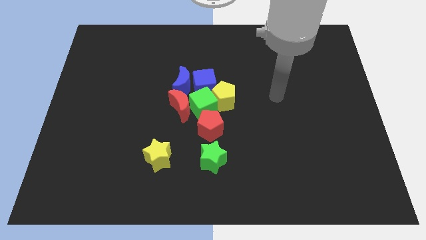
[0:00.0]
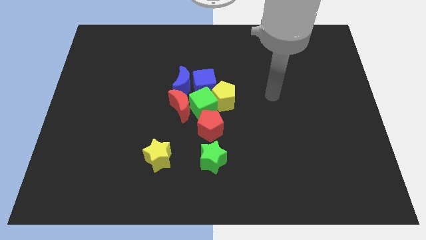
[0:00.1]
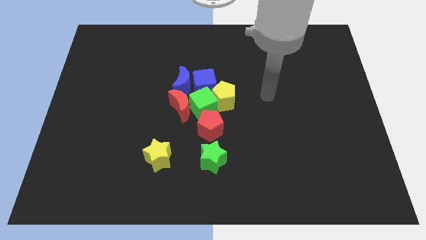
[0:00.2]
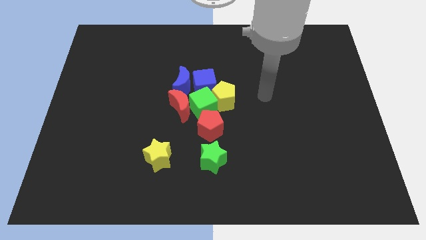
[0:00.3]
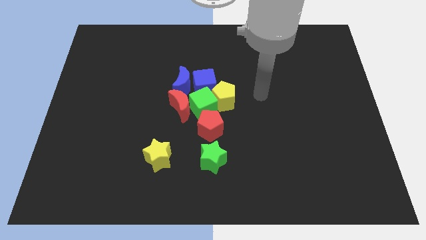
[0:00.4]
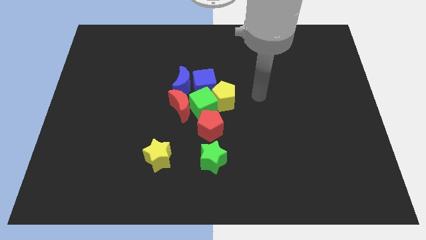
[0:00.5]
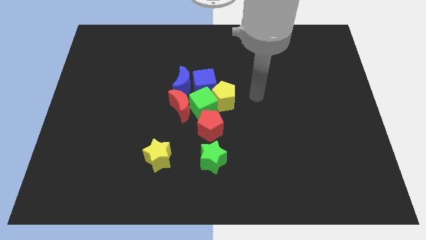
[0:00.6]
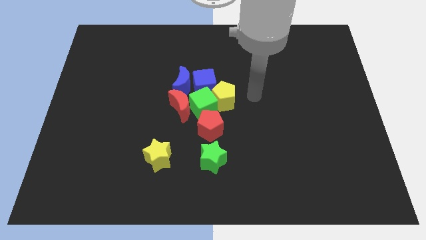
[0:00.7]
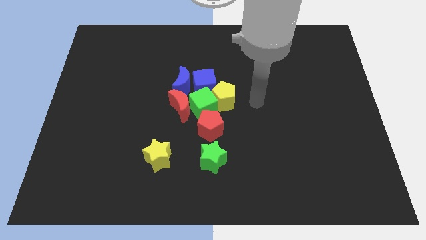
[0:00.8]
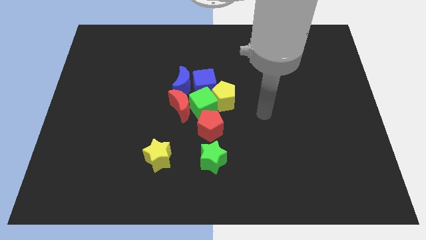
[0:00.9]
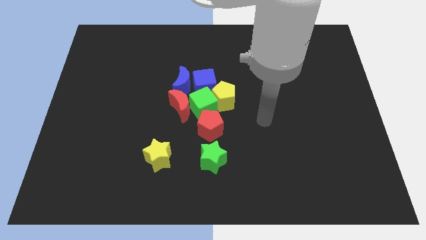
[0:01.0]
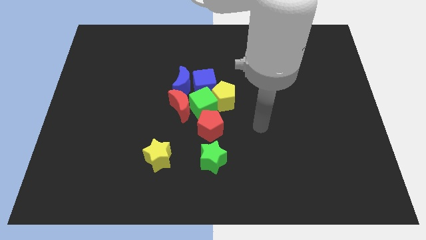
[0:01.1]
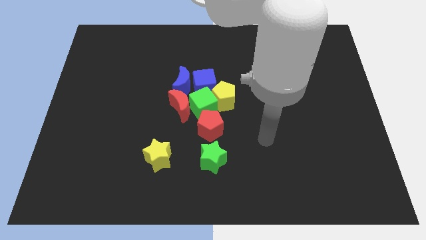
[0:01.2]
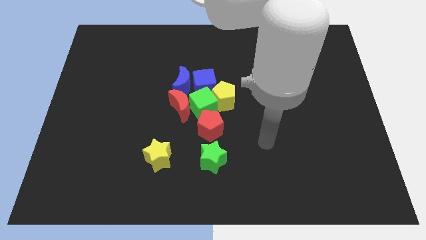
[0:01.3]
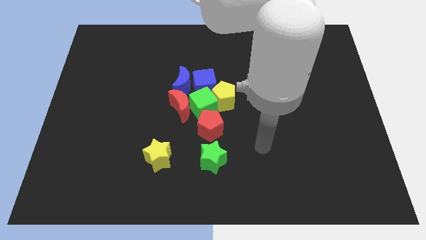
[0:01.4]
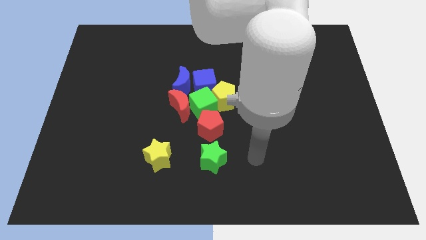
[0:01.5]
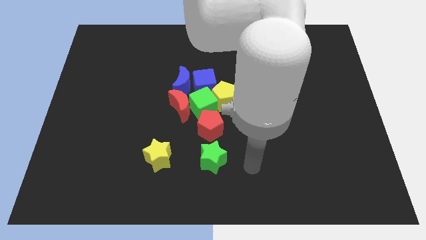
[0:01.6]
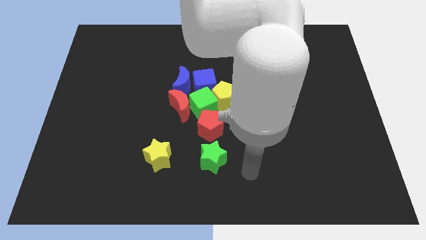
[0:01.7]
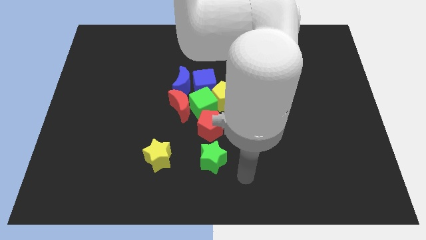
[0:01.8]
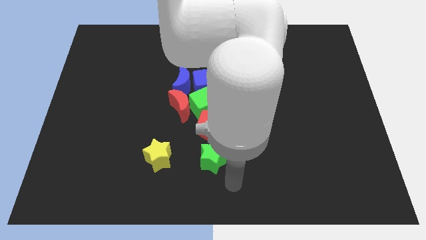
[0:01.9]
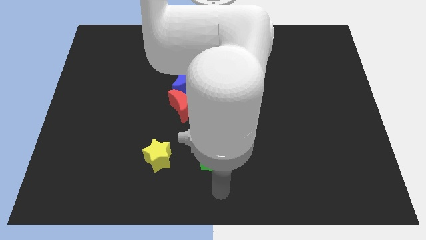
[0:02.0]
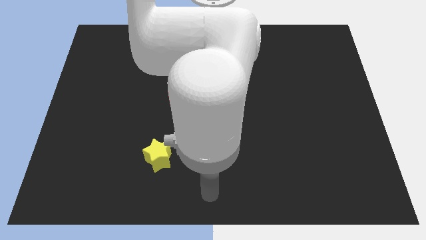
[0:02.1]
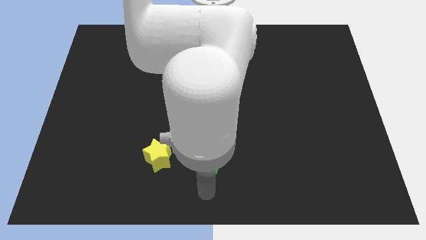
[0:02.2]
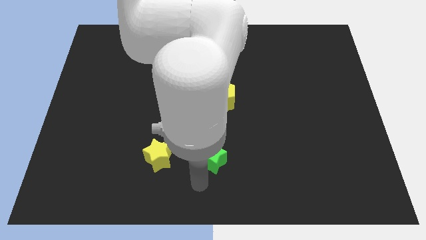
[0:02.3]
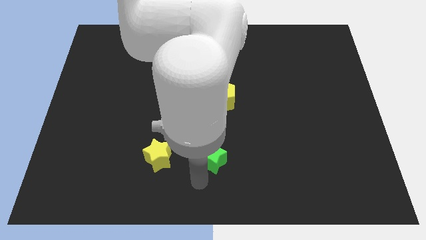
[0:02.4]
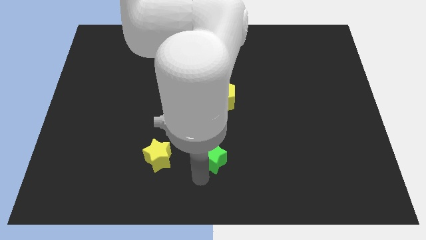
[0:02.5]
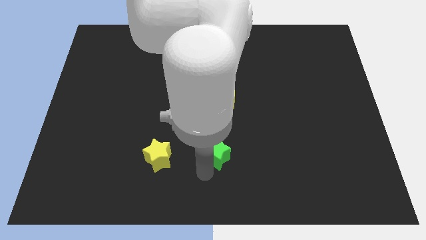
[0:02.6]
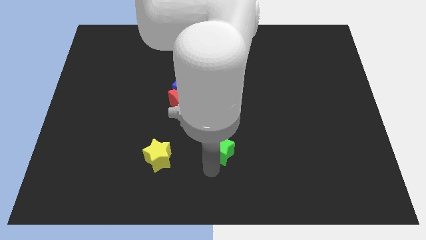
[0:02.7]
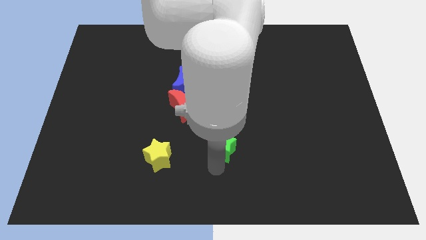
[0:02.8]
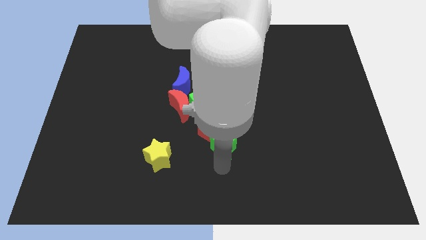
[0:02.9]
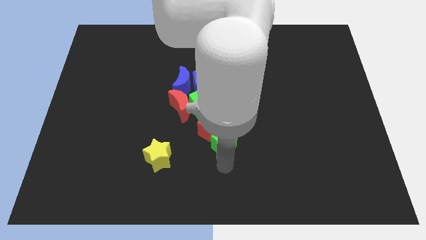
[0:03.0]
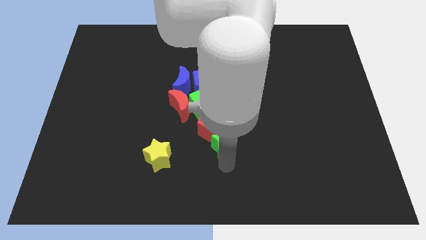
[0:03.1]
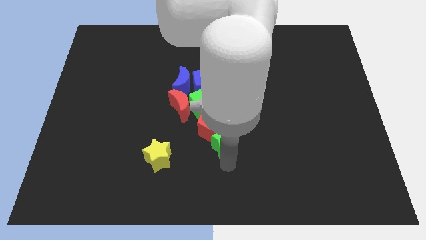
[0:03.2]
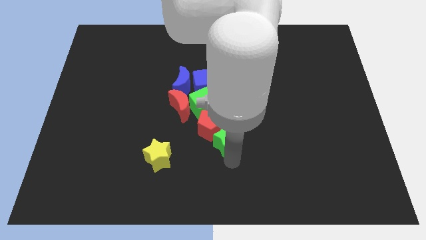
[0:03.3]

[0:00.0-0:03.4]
move green star into the red pentagon

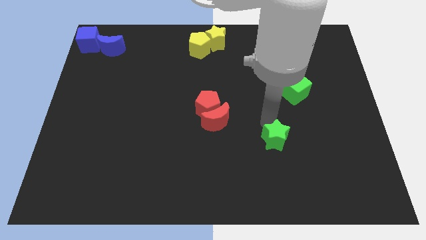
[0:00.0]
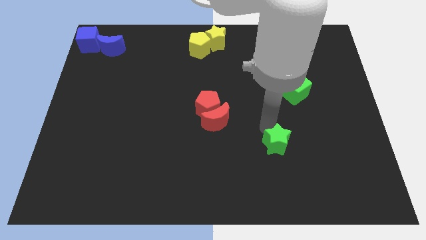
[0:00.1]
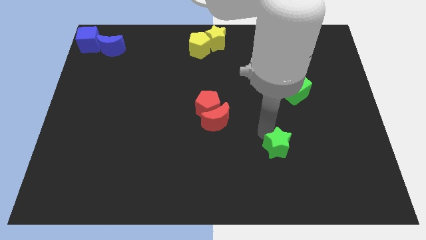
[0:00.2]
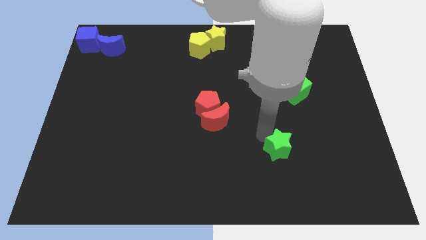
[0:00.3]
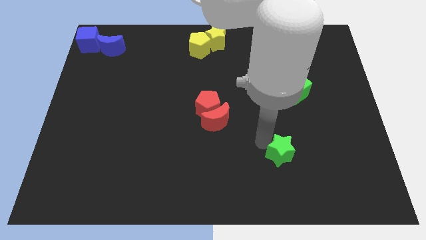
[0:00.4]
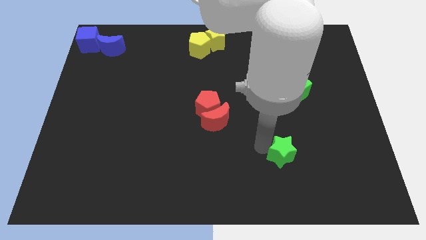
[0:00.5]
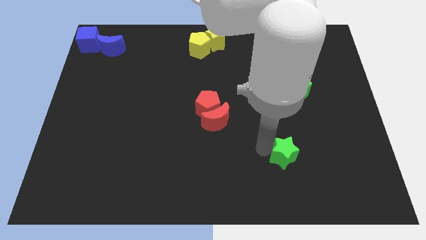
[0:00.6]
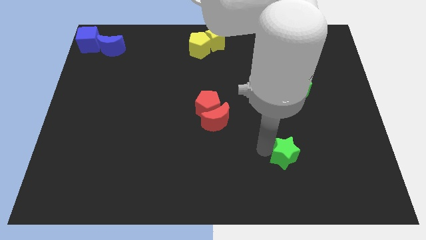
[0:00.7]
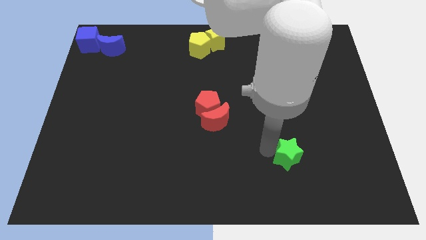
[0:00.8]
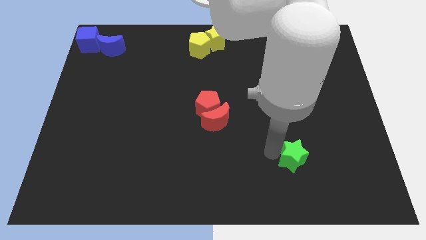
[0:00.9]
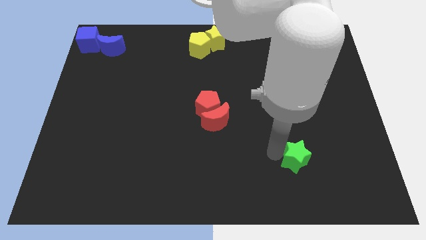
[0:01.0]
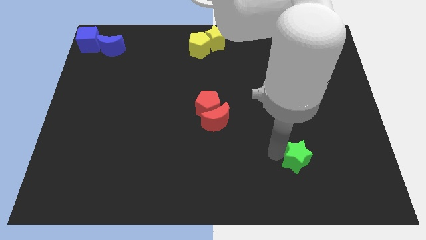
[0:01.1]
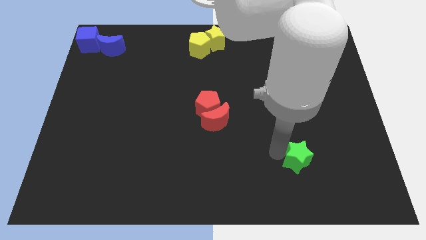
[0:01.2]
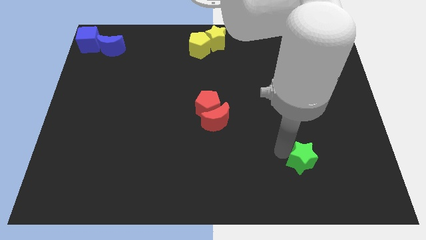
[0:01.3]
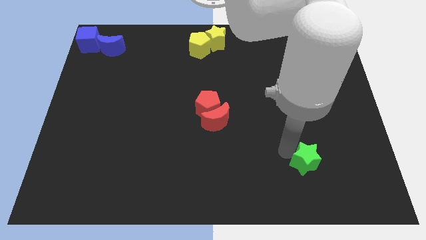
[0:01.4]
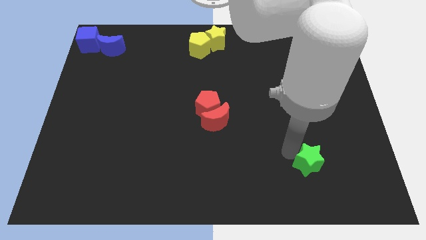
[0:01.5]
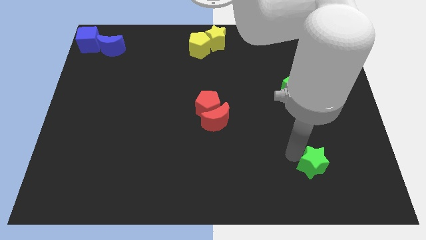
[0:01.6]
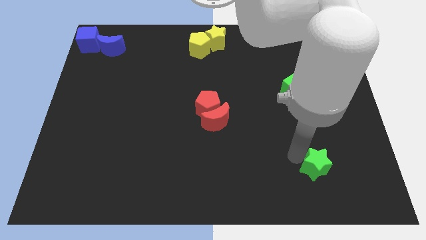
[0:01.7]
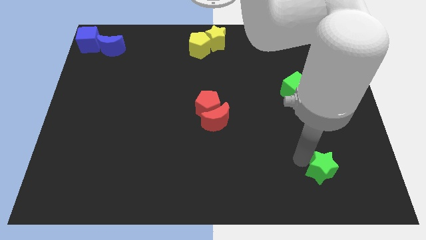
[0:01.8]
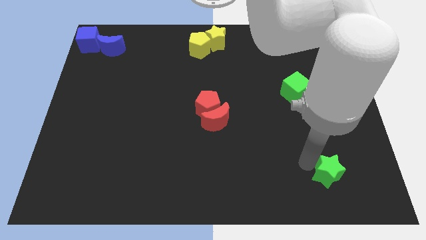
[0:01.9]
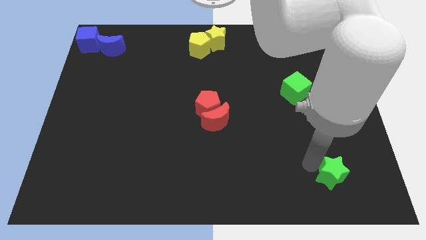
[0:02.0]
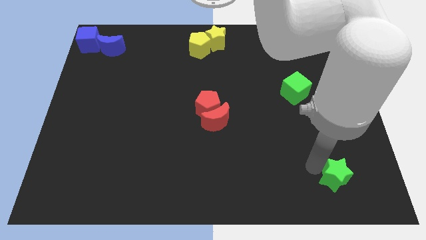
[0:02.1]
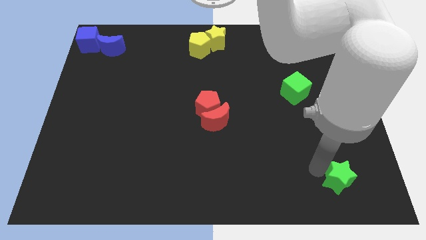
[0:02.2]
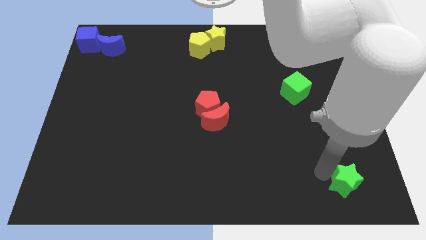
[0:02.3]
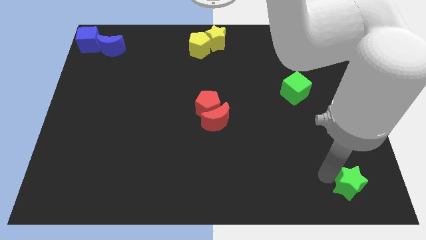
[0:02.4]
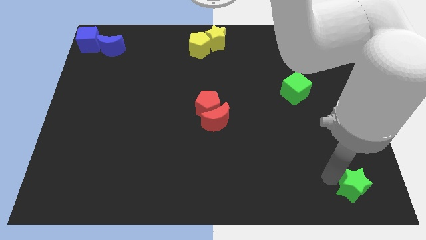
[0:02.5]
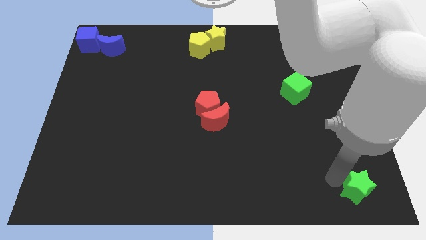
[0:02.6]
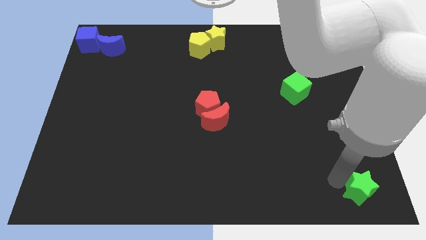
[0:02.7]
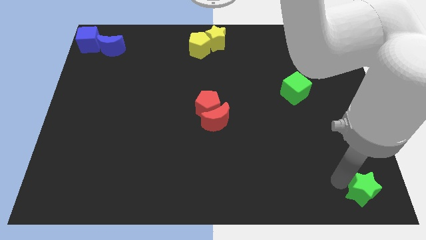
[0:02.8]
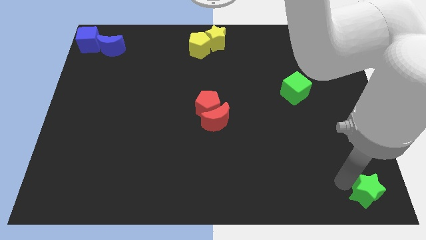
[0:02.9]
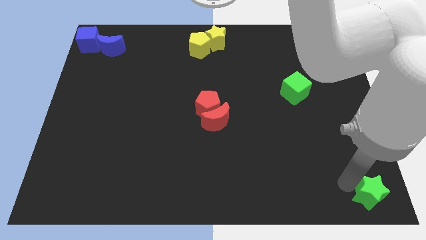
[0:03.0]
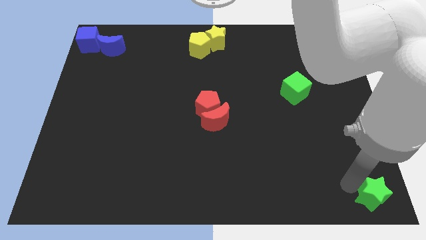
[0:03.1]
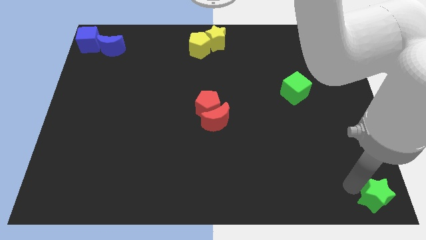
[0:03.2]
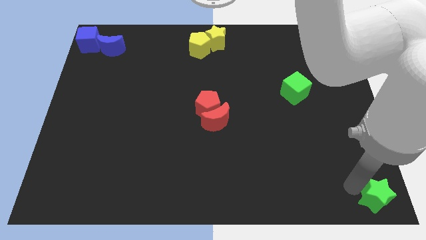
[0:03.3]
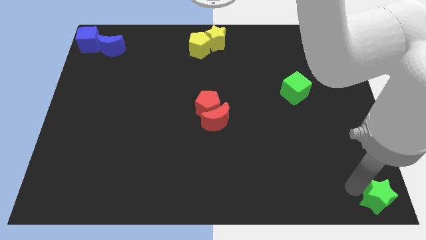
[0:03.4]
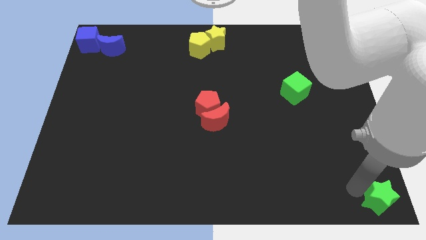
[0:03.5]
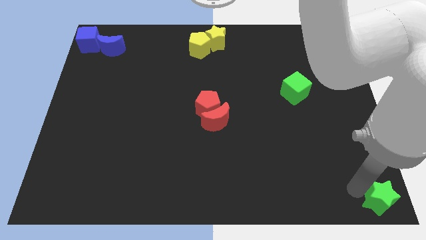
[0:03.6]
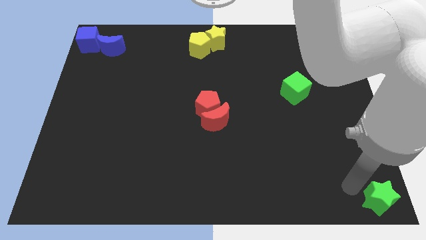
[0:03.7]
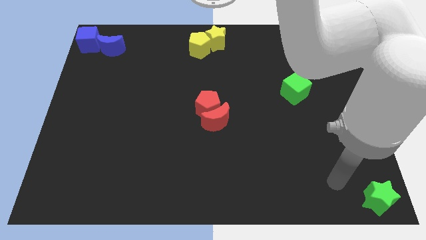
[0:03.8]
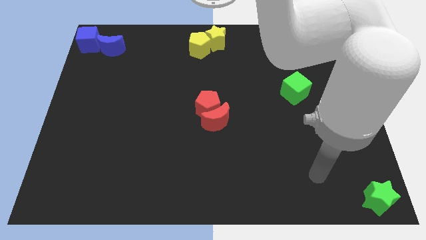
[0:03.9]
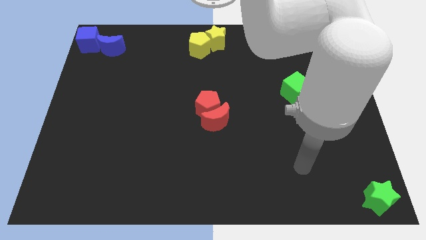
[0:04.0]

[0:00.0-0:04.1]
place the green star at the bottom right corner of the board

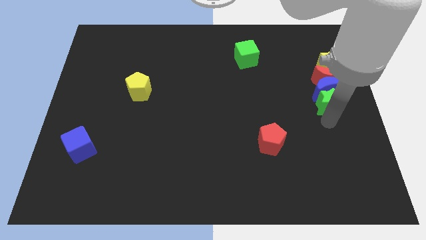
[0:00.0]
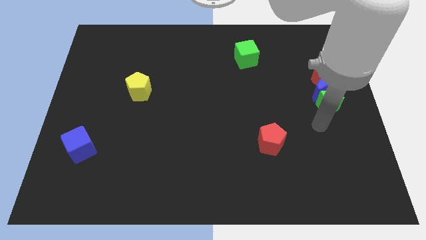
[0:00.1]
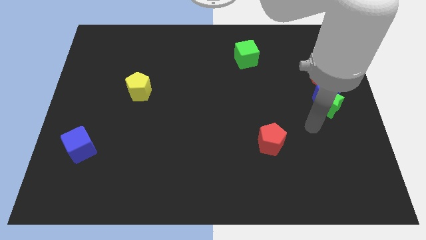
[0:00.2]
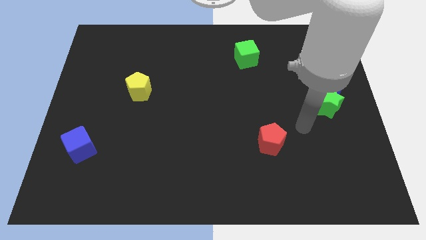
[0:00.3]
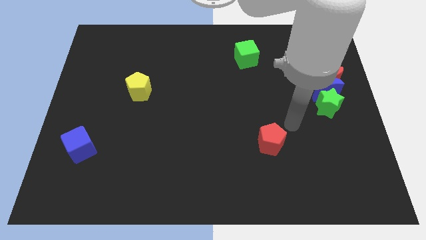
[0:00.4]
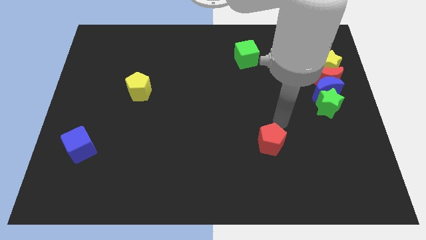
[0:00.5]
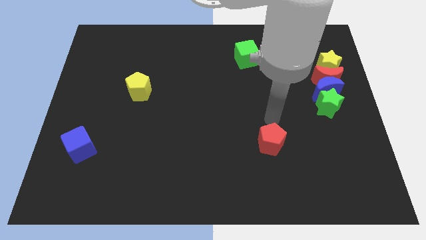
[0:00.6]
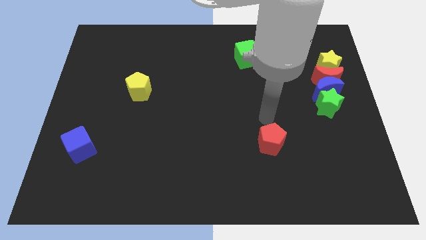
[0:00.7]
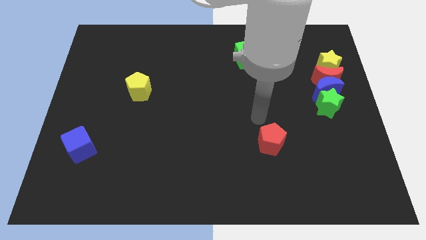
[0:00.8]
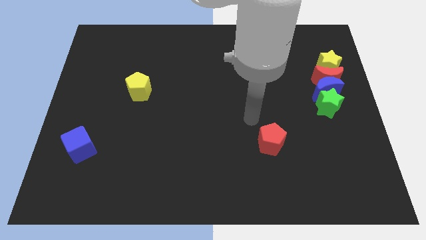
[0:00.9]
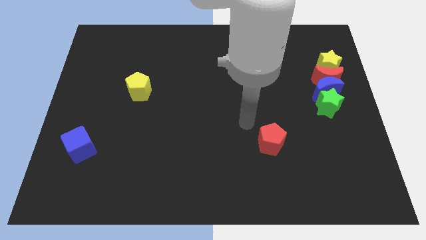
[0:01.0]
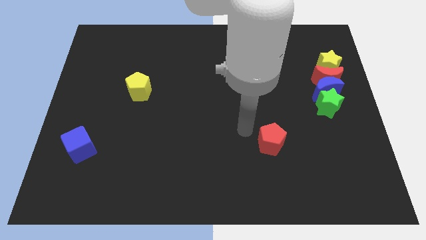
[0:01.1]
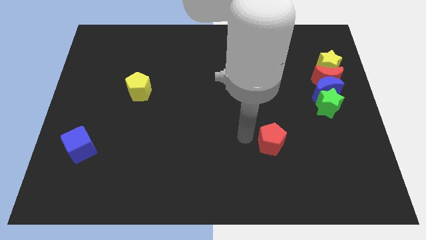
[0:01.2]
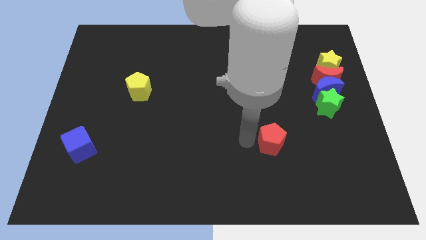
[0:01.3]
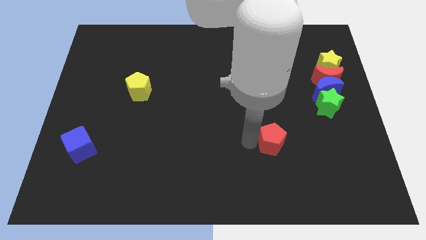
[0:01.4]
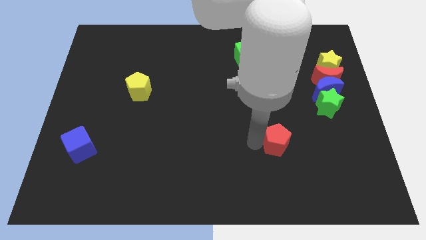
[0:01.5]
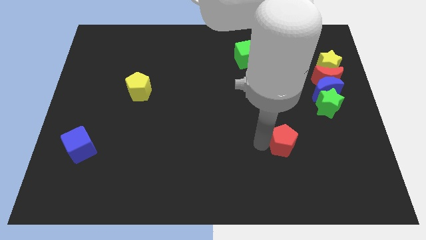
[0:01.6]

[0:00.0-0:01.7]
place the arm to the left of the red pentagon
